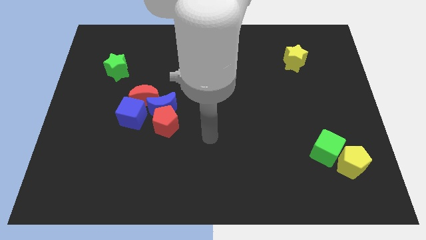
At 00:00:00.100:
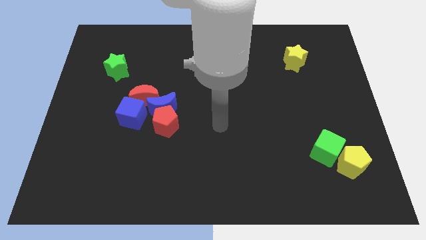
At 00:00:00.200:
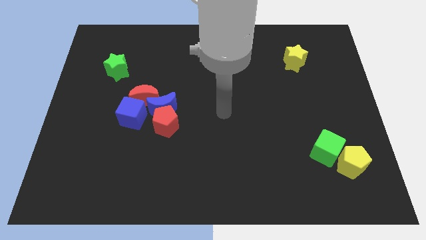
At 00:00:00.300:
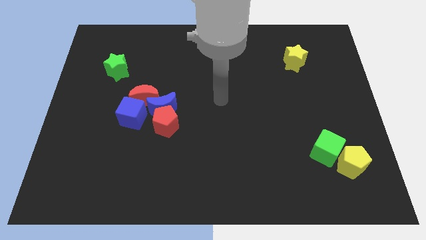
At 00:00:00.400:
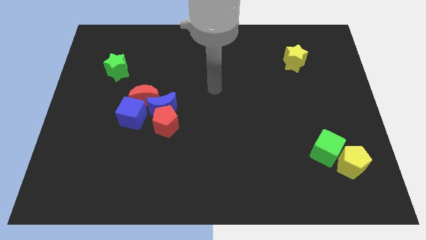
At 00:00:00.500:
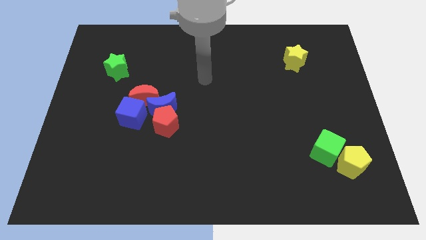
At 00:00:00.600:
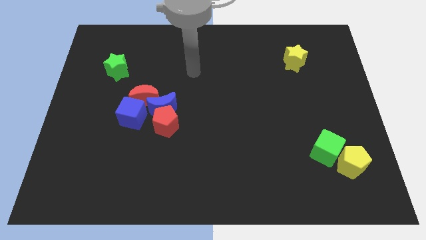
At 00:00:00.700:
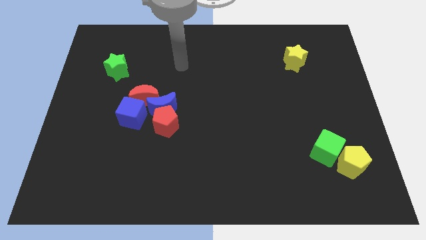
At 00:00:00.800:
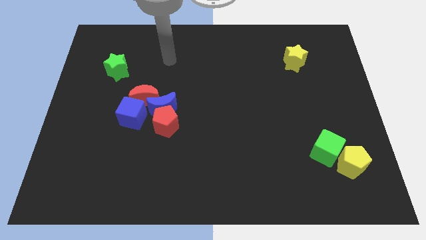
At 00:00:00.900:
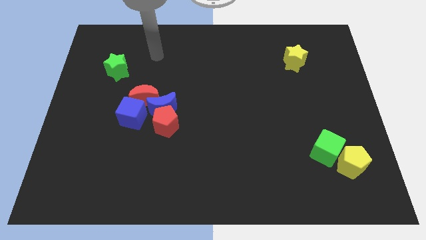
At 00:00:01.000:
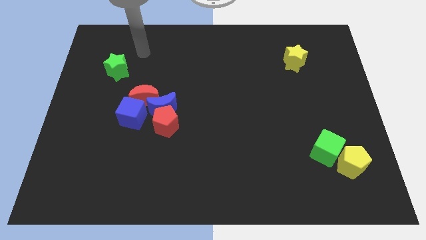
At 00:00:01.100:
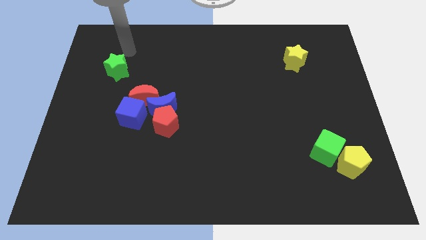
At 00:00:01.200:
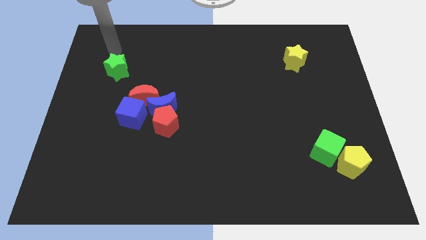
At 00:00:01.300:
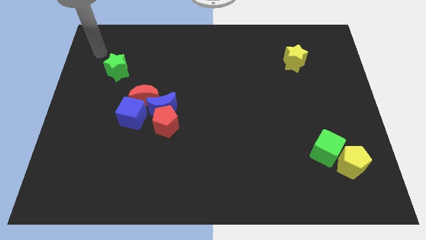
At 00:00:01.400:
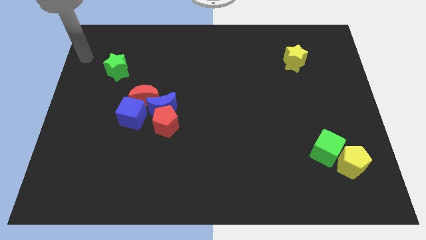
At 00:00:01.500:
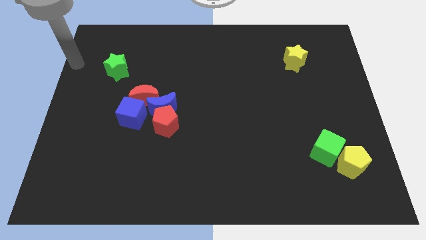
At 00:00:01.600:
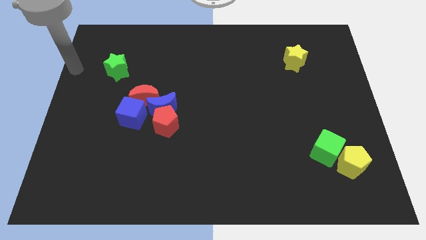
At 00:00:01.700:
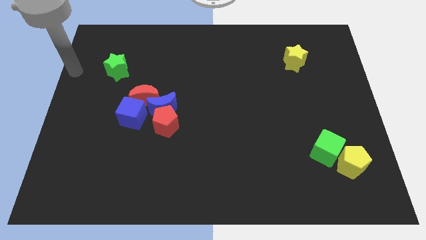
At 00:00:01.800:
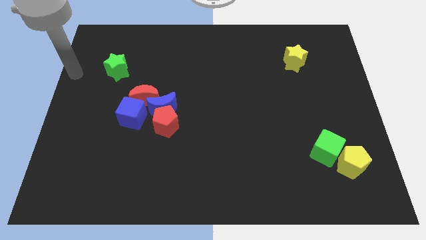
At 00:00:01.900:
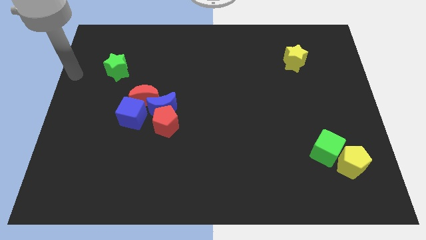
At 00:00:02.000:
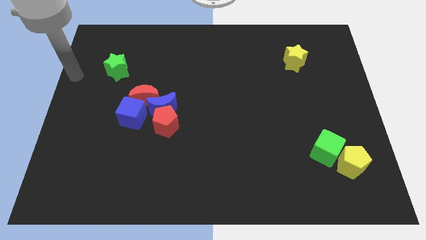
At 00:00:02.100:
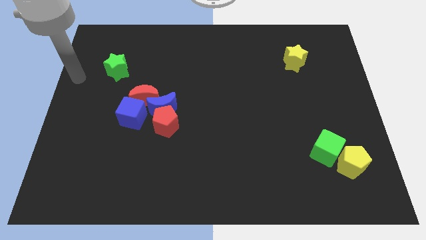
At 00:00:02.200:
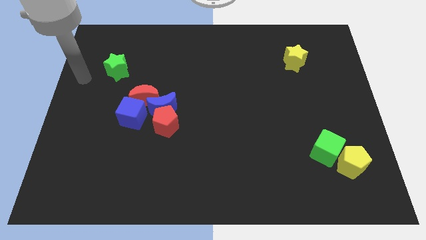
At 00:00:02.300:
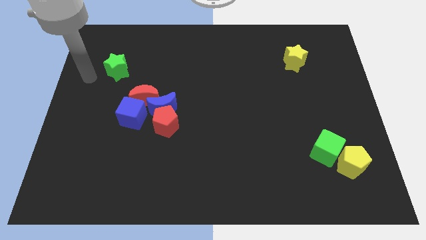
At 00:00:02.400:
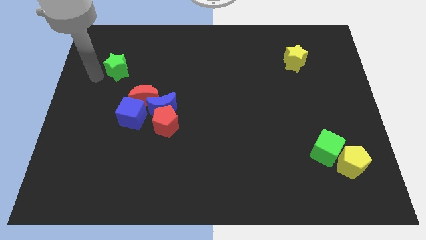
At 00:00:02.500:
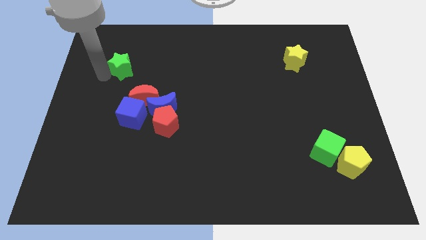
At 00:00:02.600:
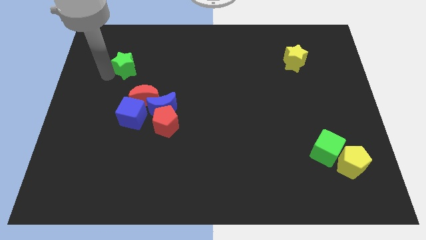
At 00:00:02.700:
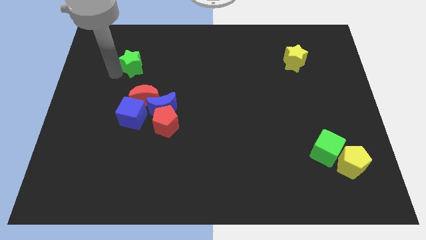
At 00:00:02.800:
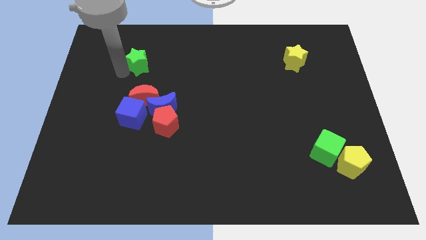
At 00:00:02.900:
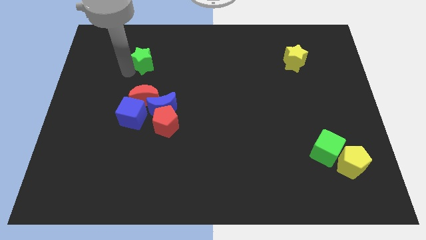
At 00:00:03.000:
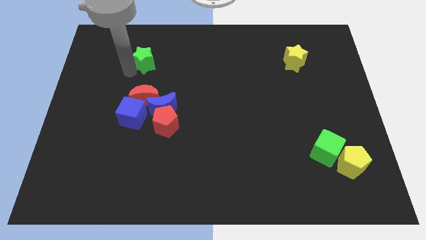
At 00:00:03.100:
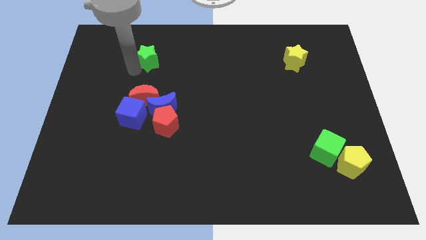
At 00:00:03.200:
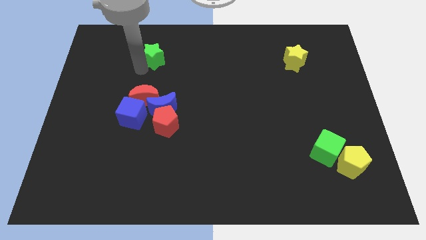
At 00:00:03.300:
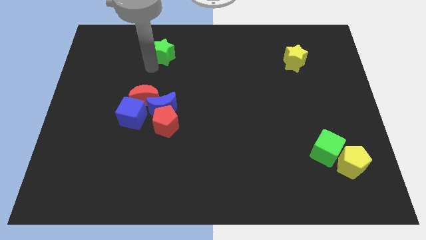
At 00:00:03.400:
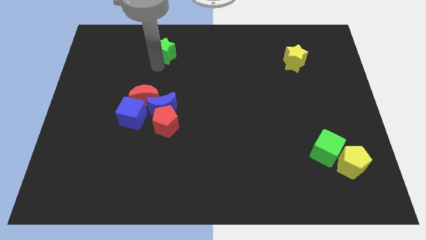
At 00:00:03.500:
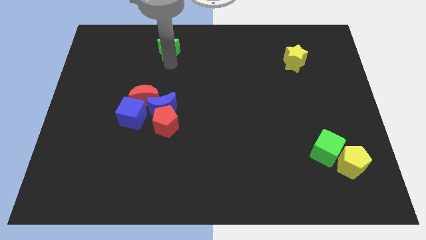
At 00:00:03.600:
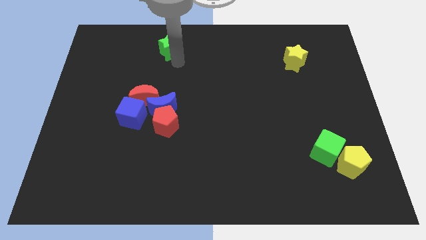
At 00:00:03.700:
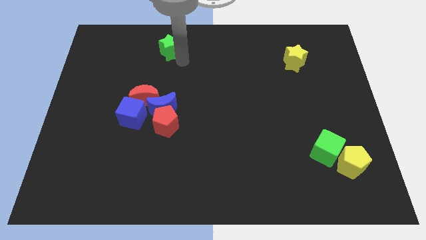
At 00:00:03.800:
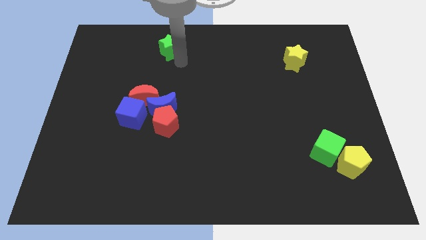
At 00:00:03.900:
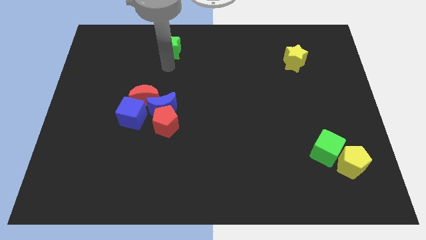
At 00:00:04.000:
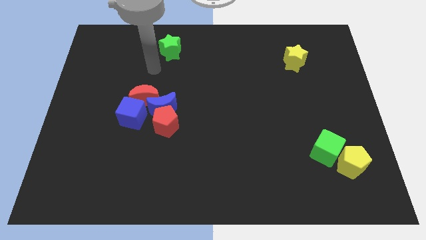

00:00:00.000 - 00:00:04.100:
push the green star slightly

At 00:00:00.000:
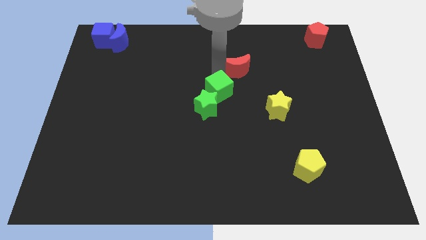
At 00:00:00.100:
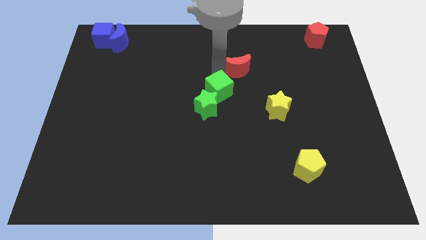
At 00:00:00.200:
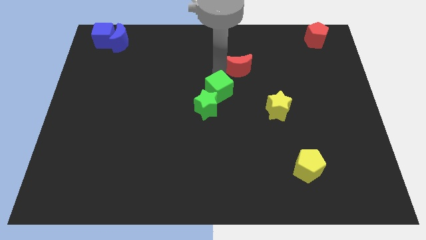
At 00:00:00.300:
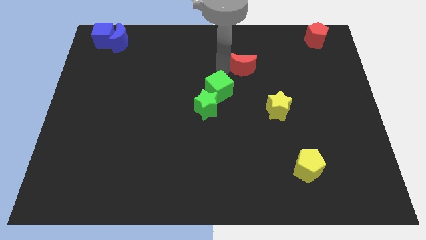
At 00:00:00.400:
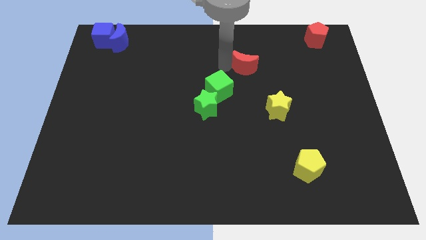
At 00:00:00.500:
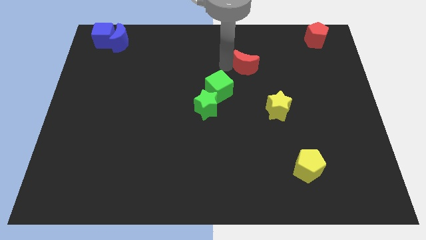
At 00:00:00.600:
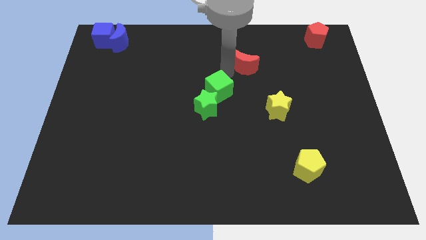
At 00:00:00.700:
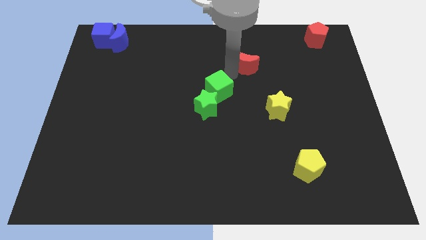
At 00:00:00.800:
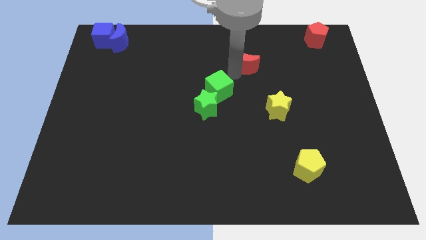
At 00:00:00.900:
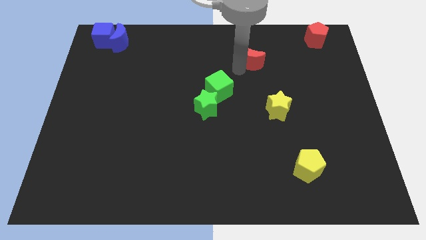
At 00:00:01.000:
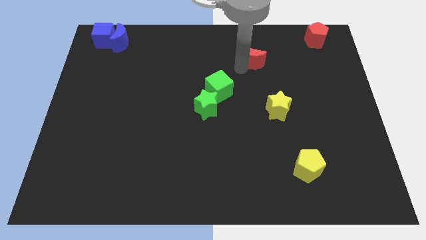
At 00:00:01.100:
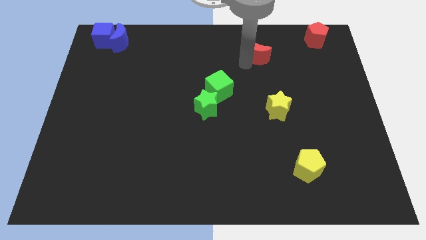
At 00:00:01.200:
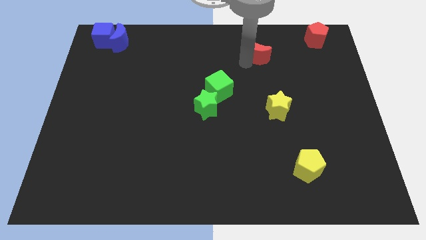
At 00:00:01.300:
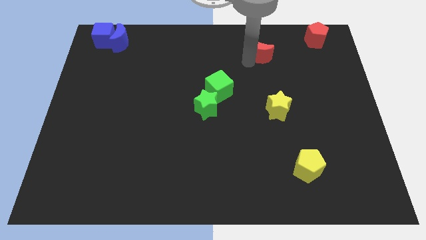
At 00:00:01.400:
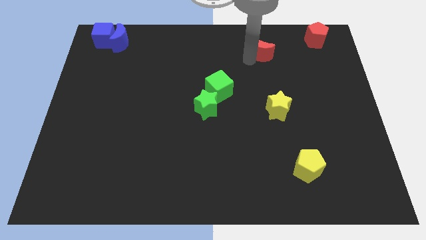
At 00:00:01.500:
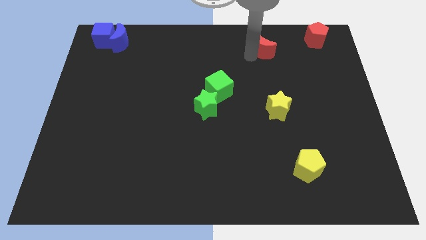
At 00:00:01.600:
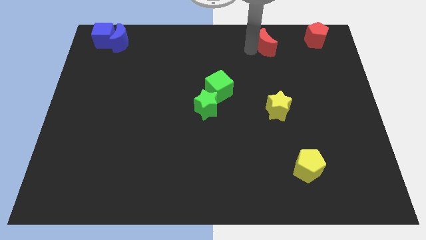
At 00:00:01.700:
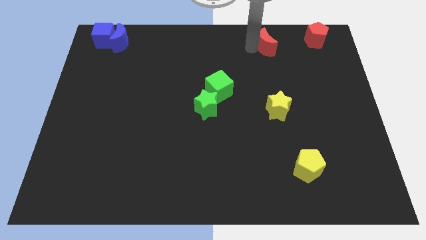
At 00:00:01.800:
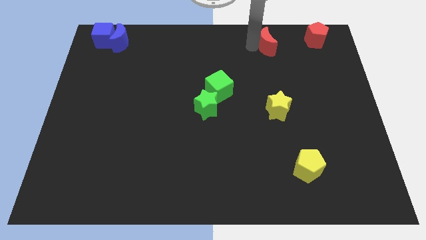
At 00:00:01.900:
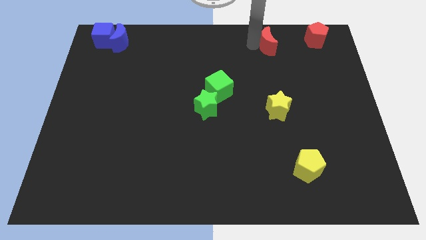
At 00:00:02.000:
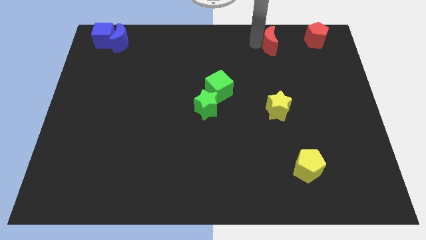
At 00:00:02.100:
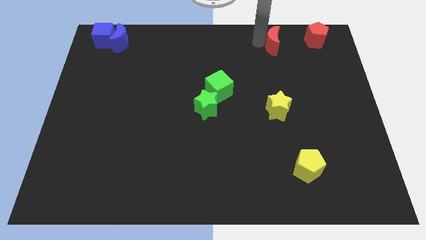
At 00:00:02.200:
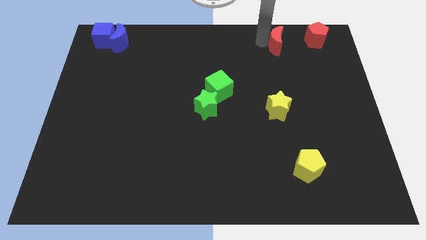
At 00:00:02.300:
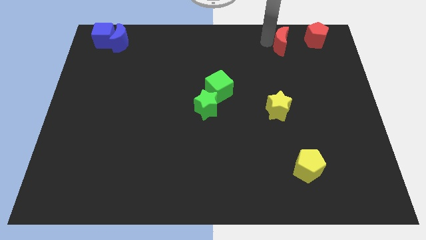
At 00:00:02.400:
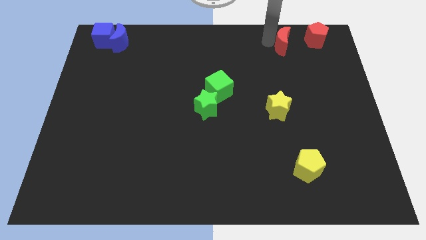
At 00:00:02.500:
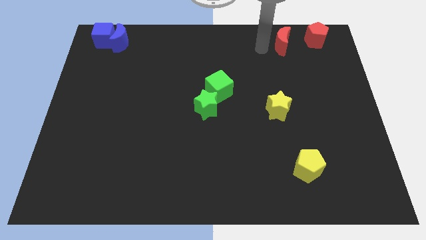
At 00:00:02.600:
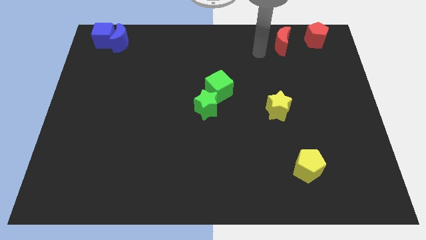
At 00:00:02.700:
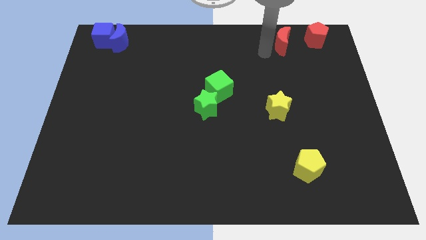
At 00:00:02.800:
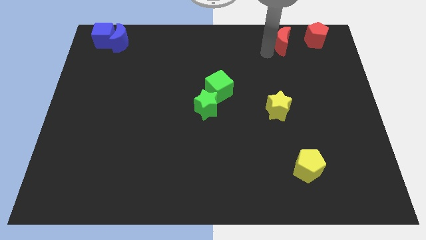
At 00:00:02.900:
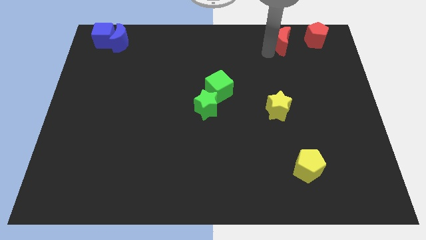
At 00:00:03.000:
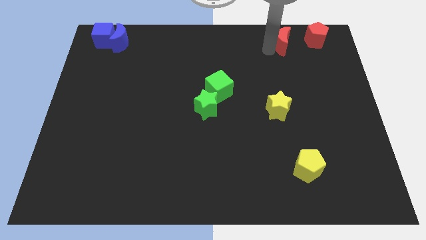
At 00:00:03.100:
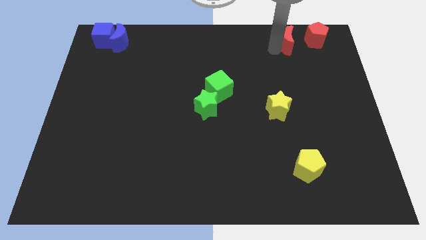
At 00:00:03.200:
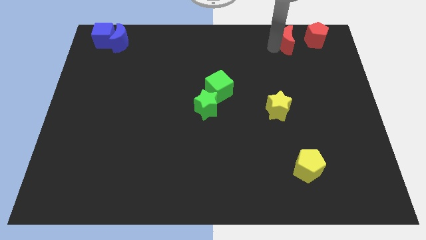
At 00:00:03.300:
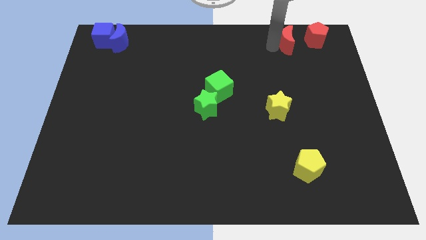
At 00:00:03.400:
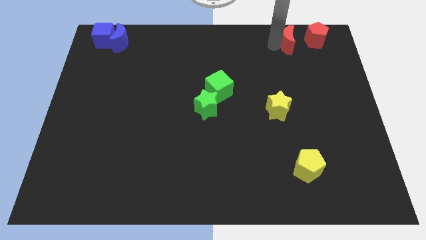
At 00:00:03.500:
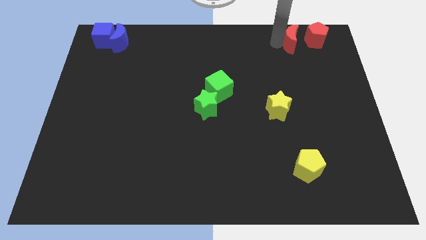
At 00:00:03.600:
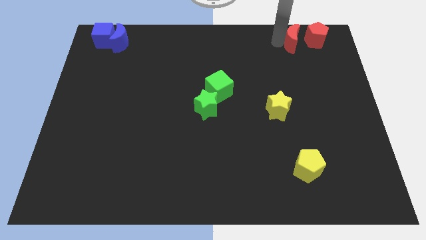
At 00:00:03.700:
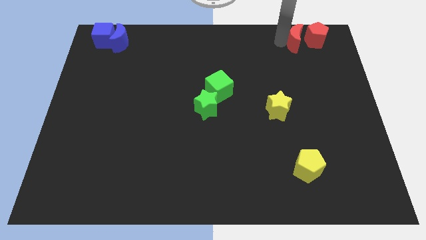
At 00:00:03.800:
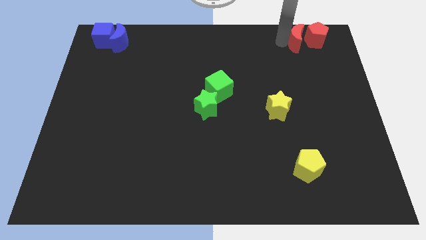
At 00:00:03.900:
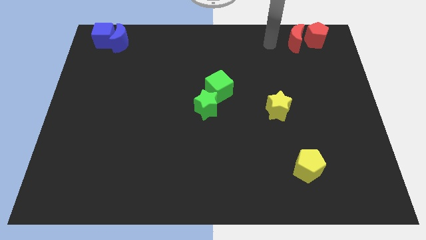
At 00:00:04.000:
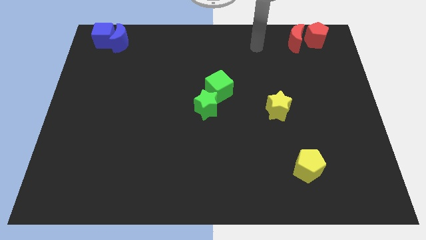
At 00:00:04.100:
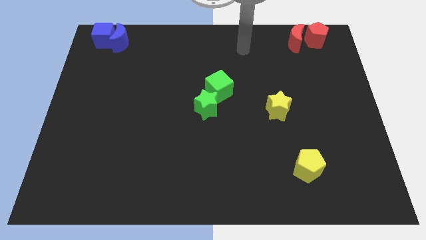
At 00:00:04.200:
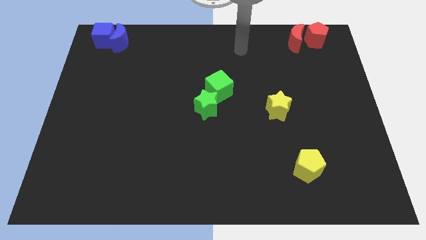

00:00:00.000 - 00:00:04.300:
put the red crescent on the left side of the red pentagon

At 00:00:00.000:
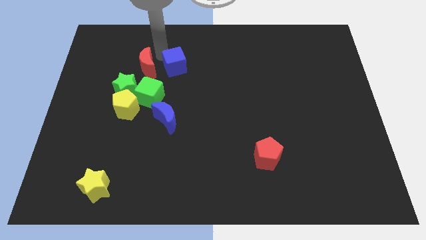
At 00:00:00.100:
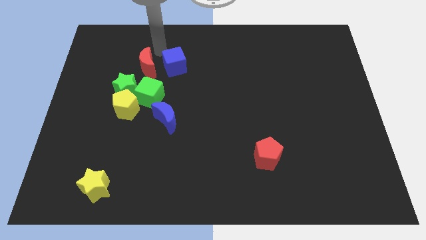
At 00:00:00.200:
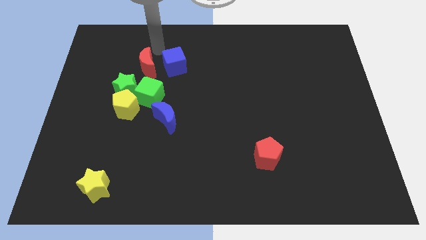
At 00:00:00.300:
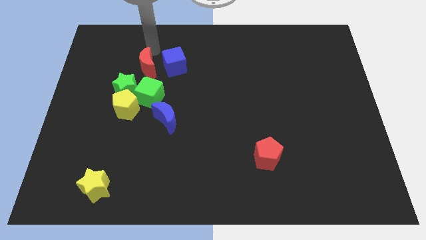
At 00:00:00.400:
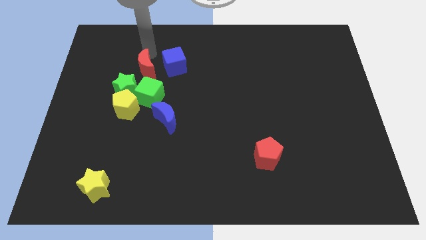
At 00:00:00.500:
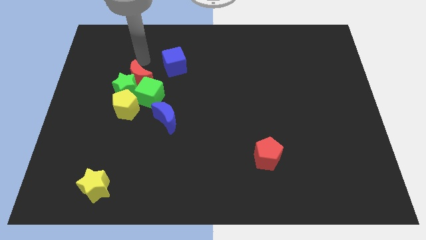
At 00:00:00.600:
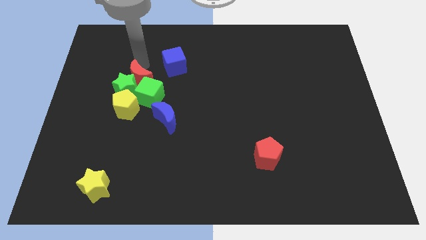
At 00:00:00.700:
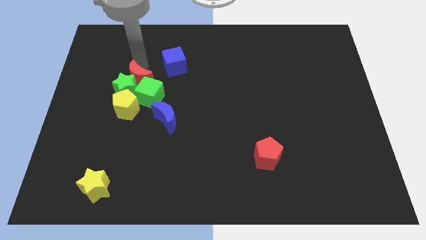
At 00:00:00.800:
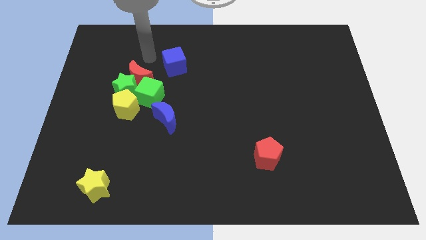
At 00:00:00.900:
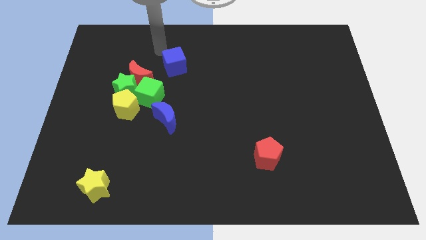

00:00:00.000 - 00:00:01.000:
place red crescent close to green star
